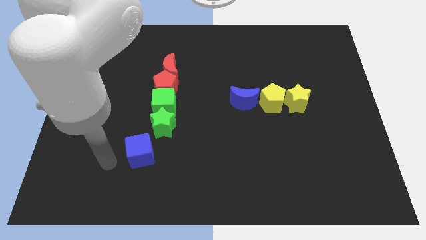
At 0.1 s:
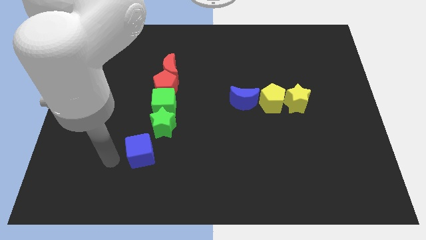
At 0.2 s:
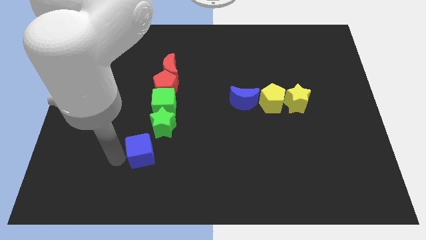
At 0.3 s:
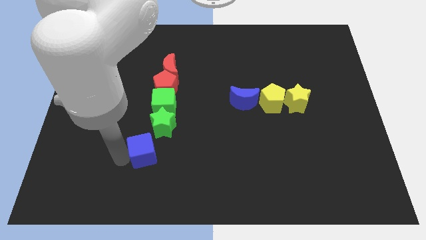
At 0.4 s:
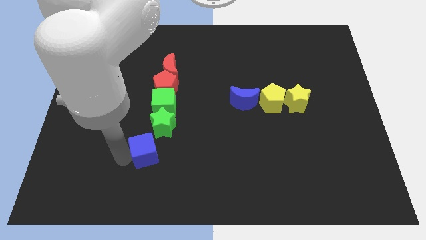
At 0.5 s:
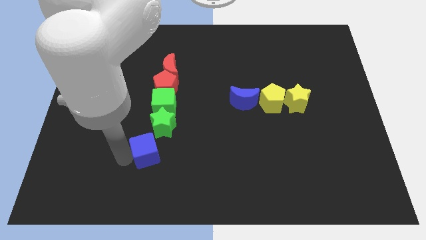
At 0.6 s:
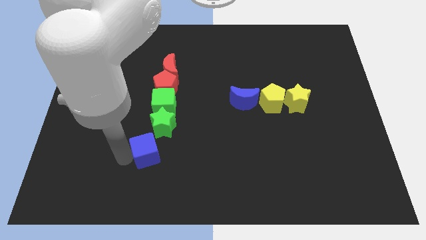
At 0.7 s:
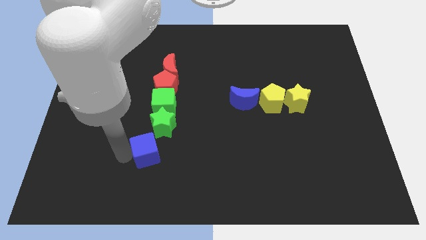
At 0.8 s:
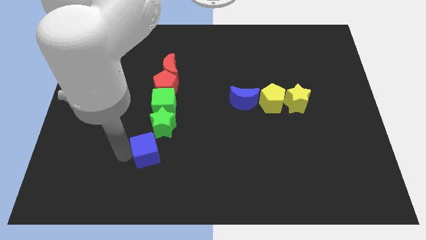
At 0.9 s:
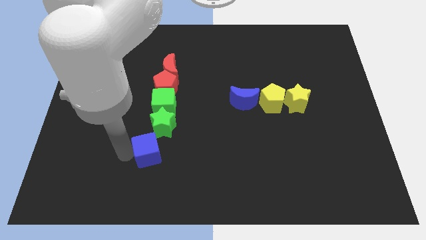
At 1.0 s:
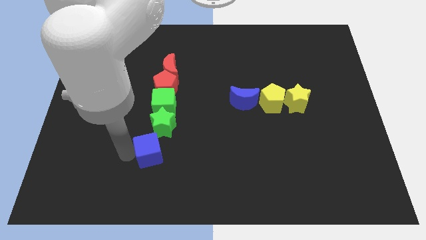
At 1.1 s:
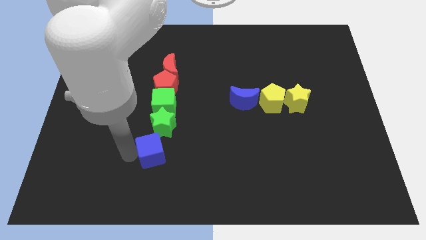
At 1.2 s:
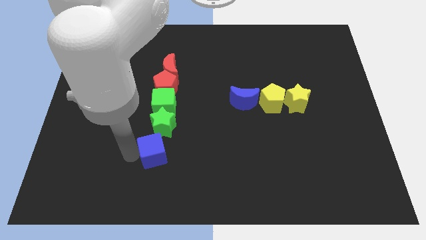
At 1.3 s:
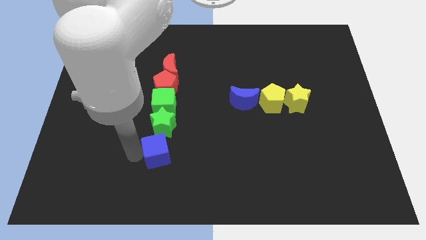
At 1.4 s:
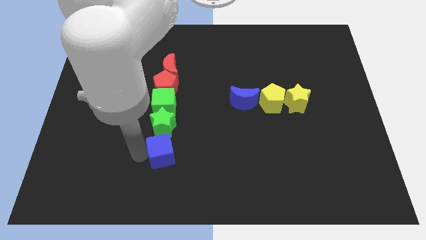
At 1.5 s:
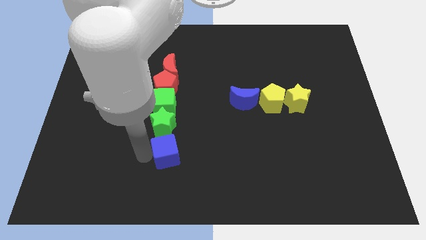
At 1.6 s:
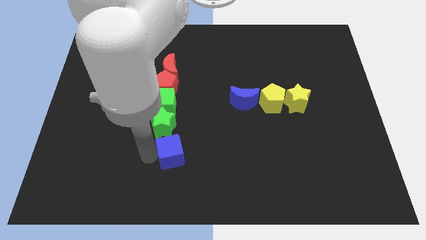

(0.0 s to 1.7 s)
slide the blue cube vertically below the group of blocks

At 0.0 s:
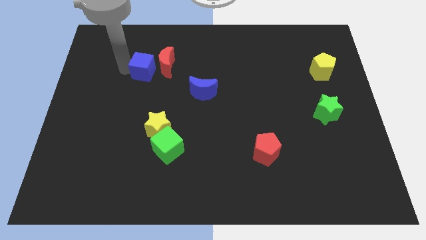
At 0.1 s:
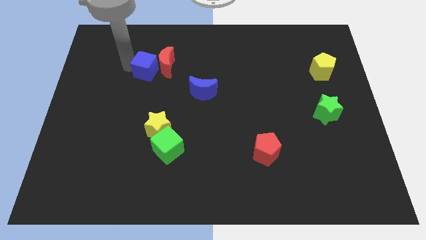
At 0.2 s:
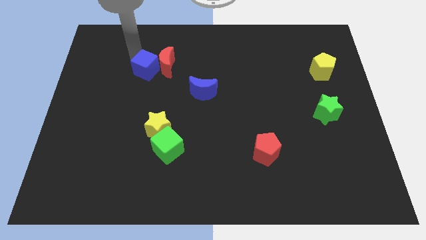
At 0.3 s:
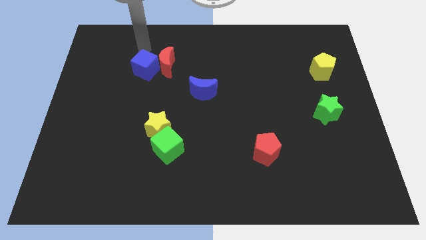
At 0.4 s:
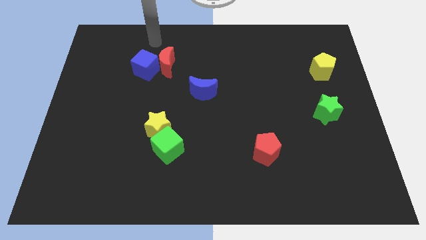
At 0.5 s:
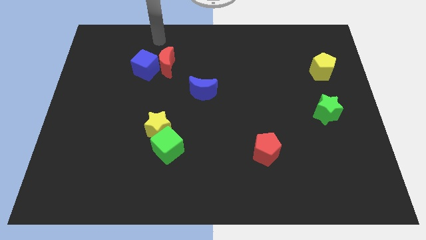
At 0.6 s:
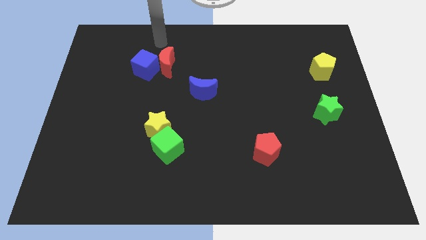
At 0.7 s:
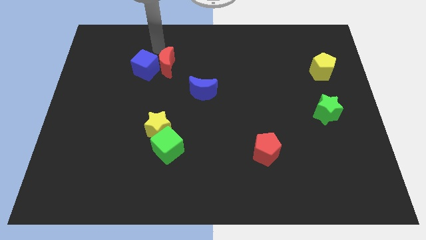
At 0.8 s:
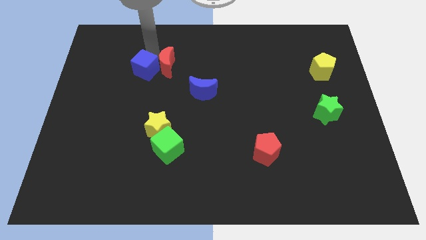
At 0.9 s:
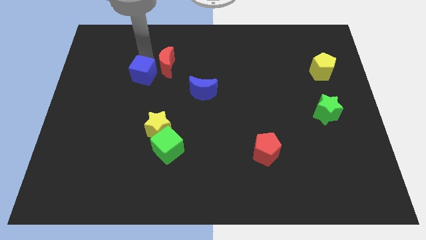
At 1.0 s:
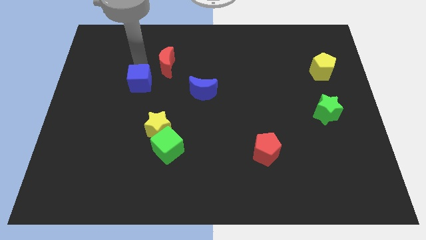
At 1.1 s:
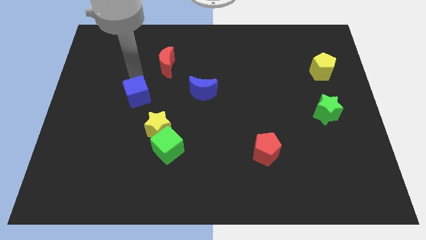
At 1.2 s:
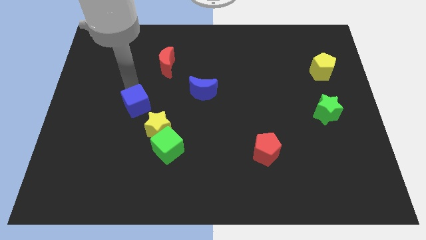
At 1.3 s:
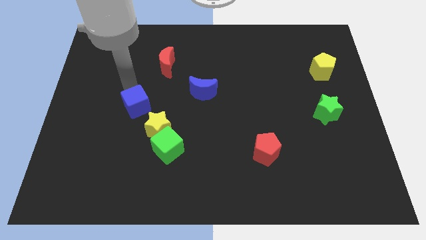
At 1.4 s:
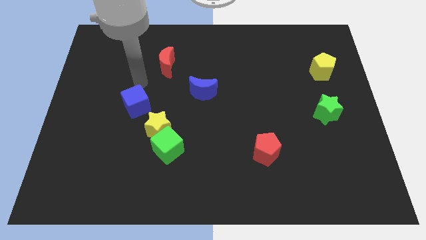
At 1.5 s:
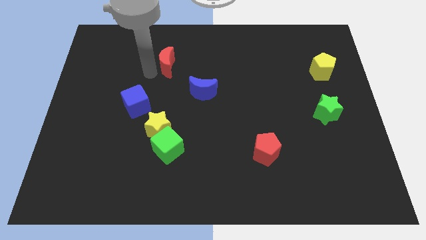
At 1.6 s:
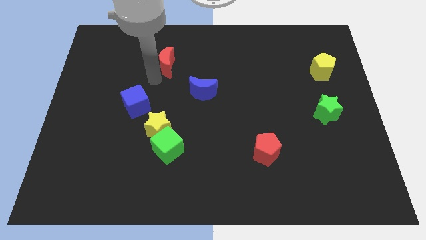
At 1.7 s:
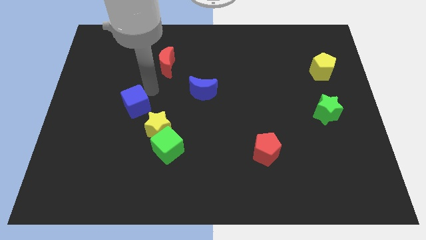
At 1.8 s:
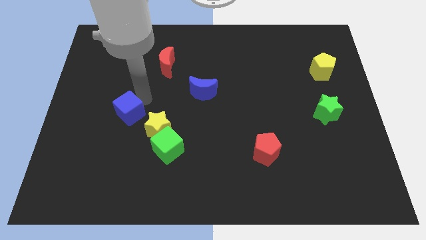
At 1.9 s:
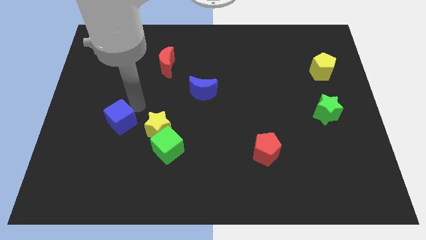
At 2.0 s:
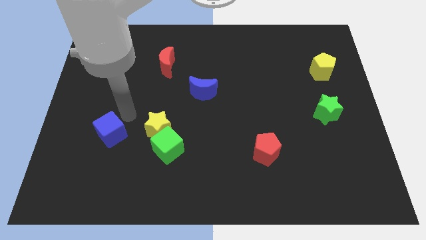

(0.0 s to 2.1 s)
move blue cube to the top left of yellow star

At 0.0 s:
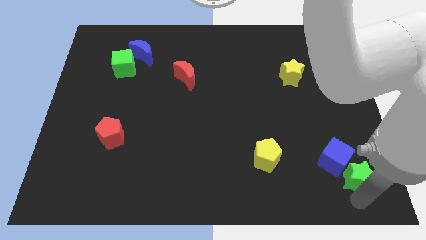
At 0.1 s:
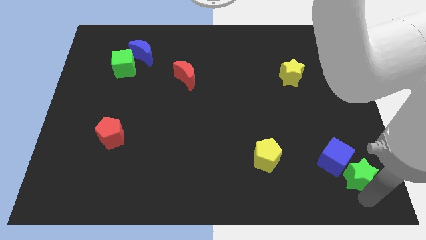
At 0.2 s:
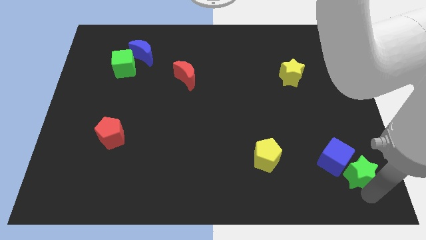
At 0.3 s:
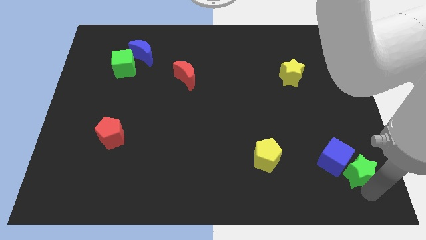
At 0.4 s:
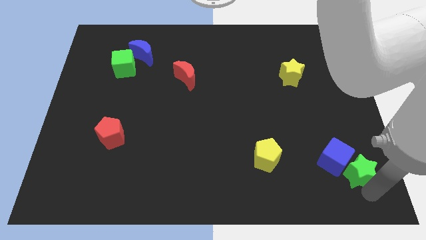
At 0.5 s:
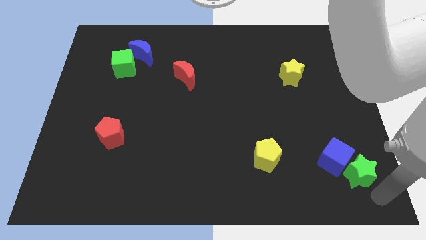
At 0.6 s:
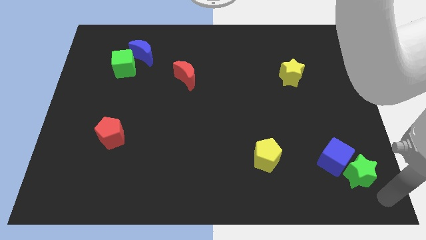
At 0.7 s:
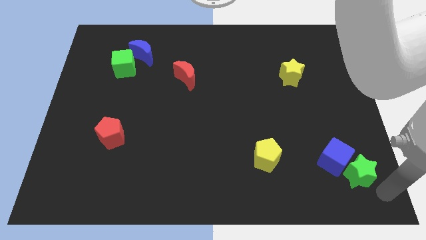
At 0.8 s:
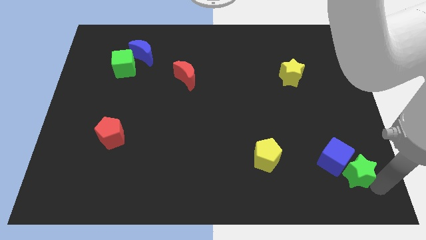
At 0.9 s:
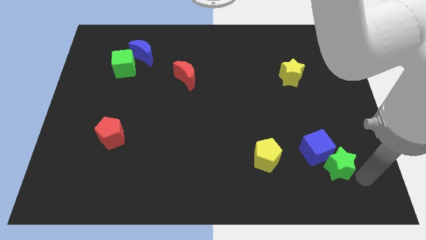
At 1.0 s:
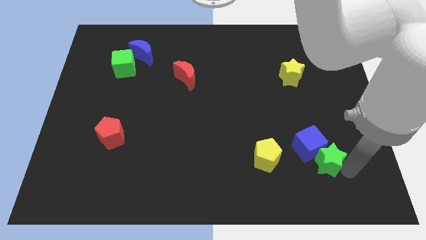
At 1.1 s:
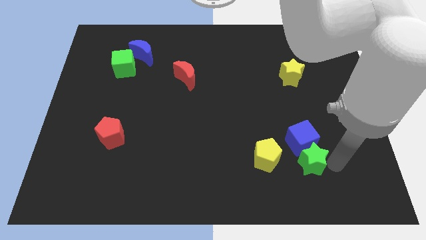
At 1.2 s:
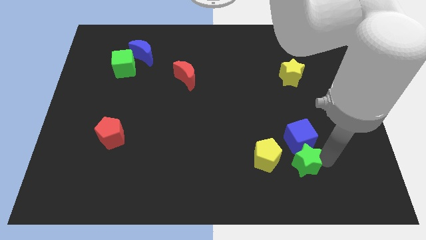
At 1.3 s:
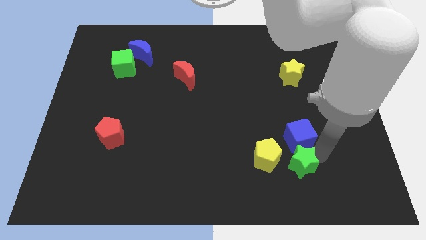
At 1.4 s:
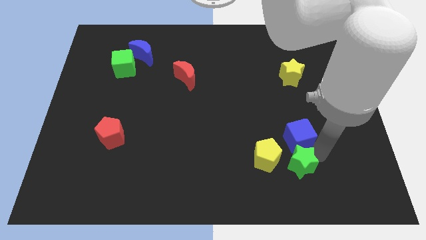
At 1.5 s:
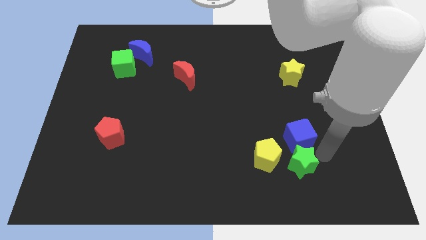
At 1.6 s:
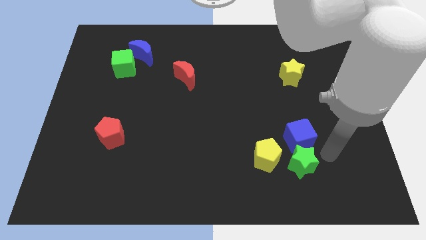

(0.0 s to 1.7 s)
push the green star along with blue cube close to yellow pentagon

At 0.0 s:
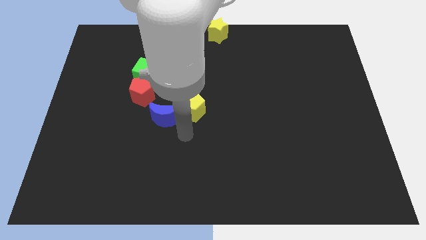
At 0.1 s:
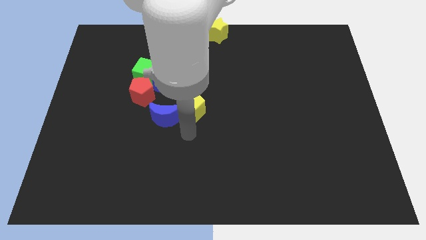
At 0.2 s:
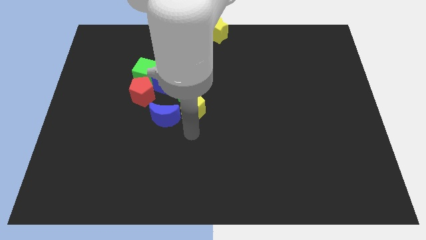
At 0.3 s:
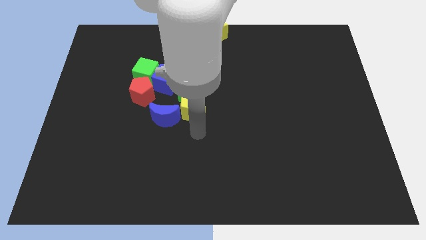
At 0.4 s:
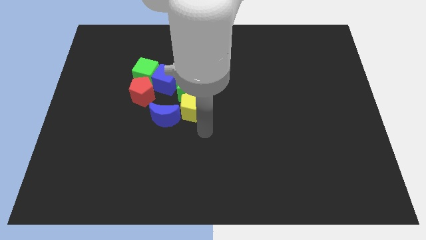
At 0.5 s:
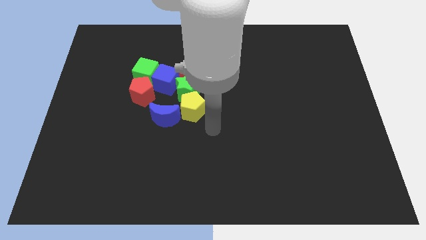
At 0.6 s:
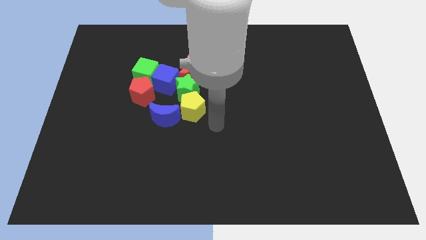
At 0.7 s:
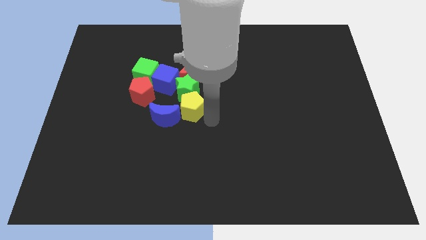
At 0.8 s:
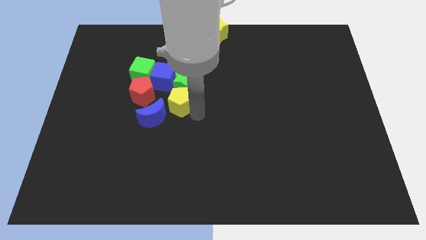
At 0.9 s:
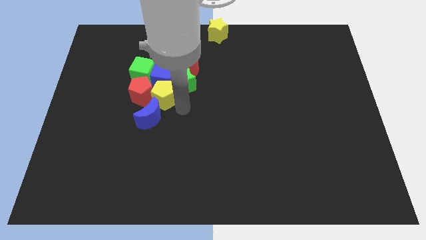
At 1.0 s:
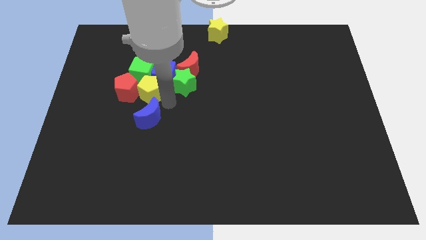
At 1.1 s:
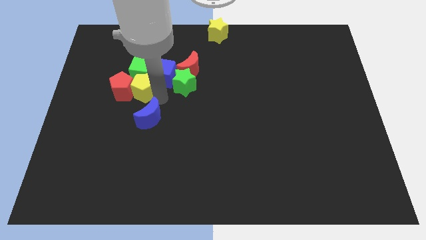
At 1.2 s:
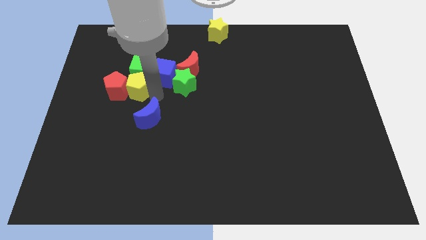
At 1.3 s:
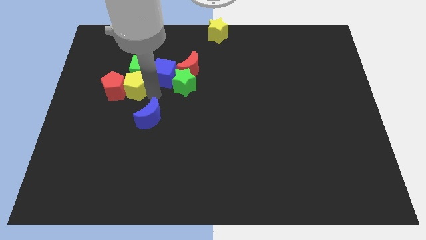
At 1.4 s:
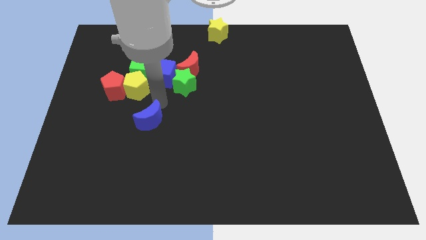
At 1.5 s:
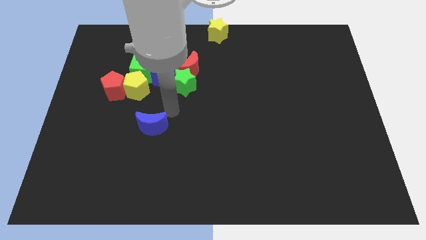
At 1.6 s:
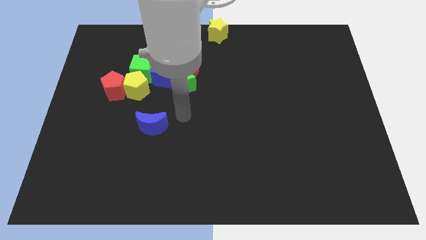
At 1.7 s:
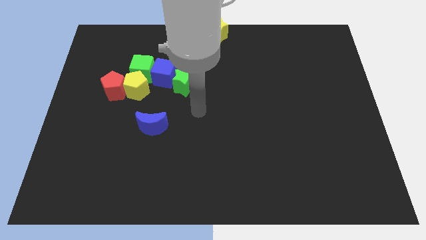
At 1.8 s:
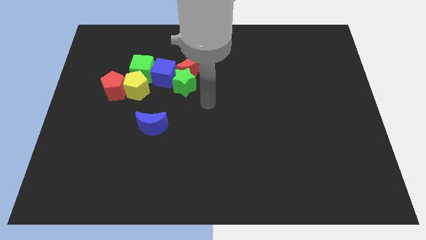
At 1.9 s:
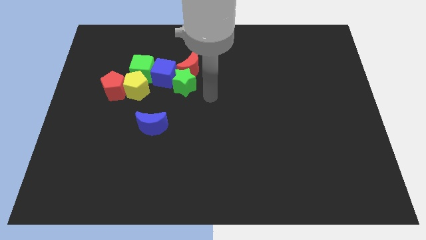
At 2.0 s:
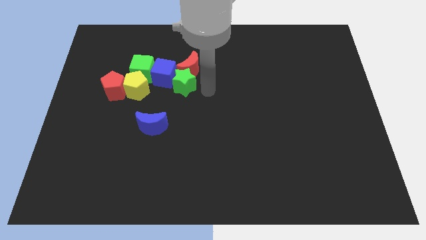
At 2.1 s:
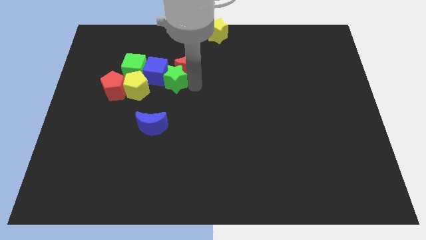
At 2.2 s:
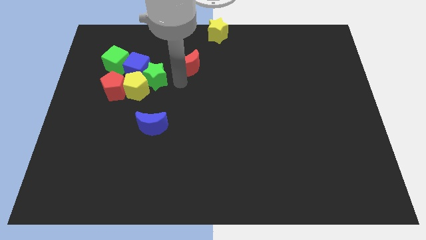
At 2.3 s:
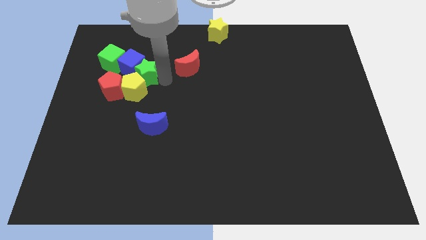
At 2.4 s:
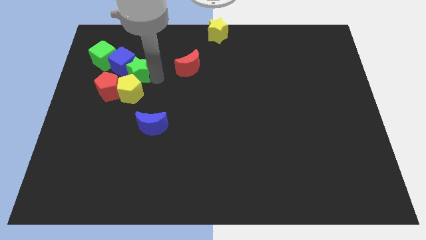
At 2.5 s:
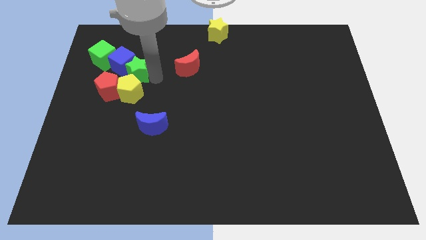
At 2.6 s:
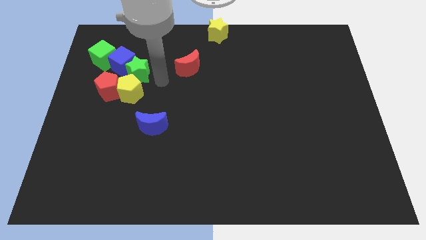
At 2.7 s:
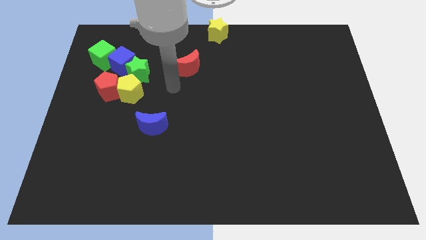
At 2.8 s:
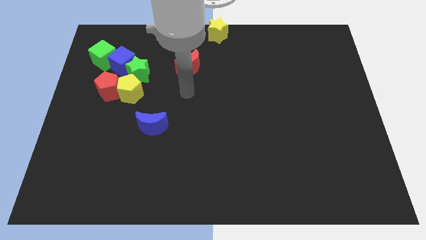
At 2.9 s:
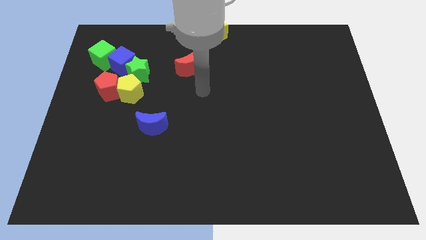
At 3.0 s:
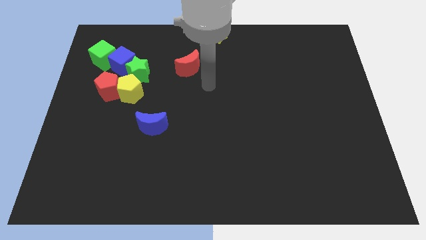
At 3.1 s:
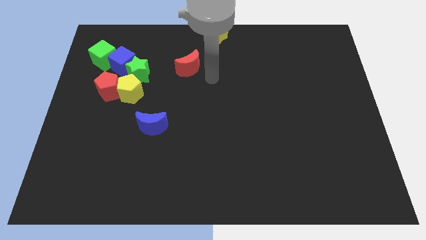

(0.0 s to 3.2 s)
separate blue crescent from the yellow pentagon towards the bottom

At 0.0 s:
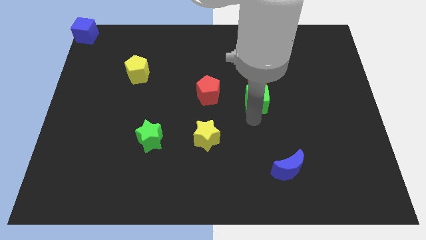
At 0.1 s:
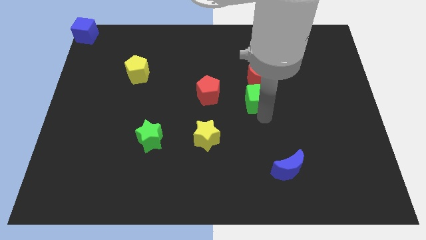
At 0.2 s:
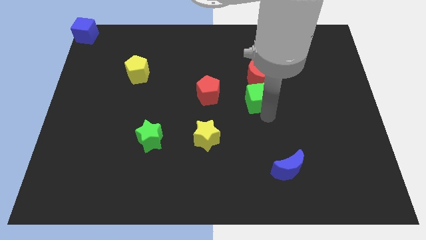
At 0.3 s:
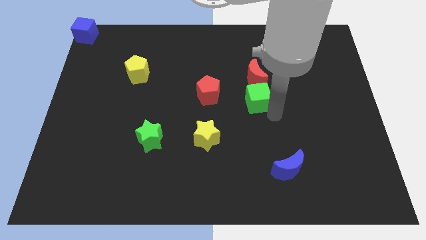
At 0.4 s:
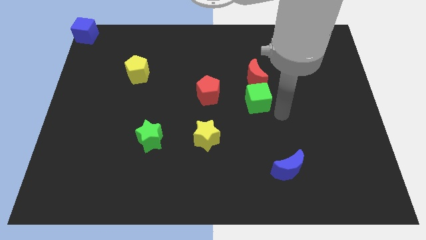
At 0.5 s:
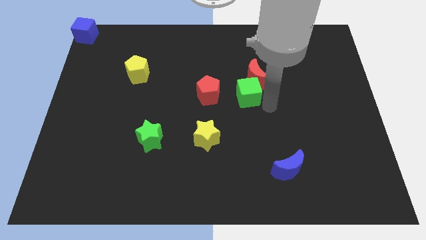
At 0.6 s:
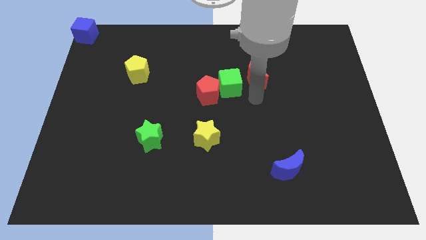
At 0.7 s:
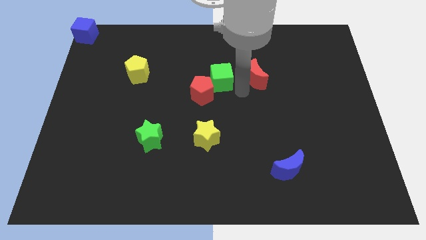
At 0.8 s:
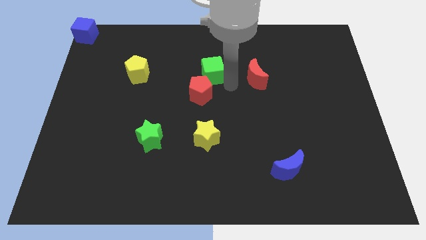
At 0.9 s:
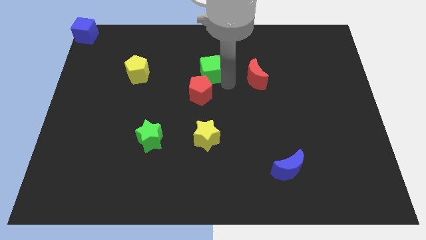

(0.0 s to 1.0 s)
place the green cube above the red pentagon
